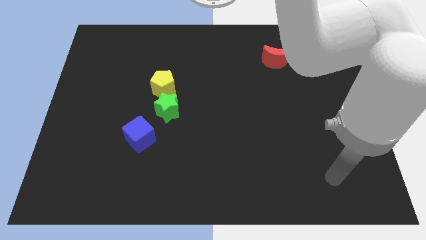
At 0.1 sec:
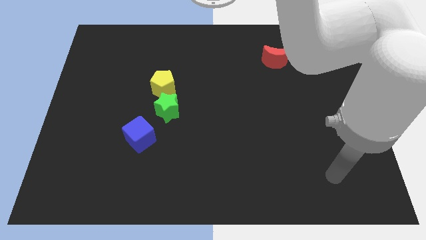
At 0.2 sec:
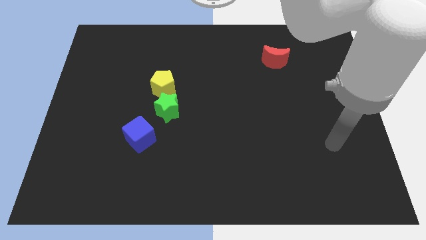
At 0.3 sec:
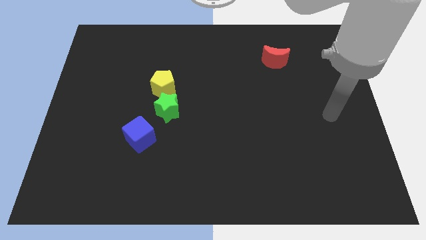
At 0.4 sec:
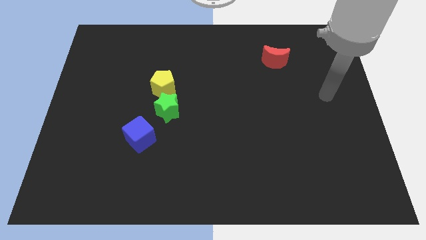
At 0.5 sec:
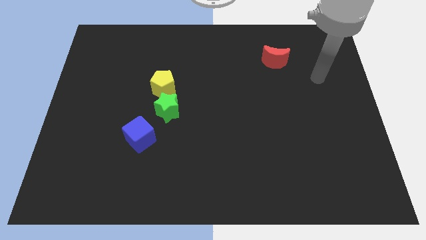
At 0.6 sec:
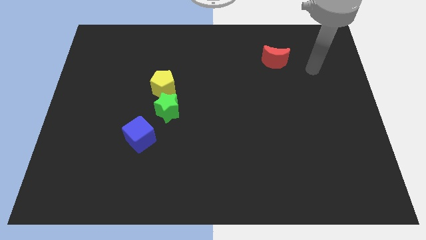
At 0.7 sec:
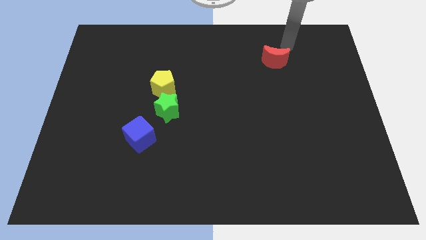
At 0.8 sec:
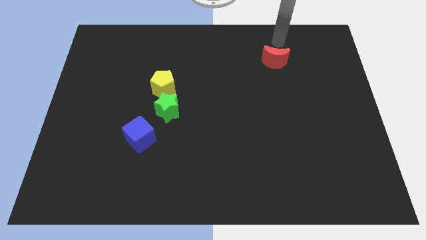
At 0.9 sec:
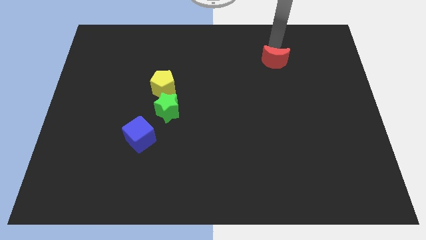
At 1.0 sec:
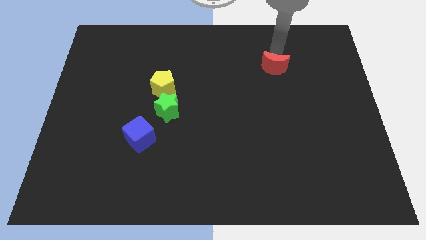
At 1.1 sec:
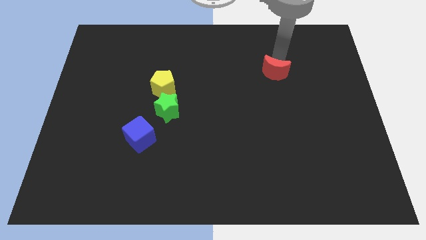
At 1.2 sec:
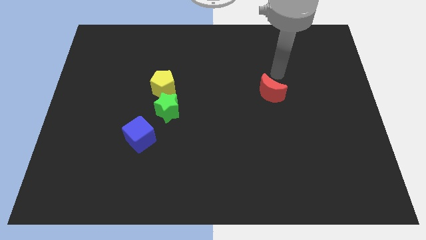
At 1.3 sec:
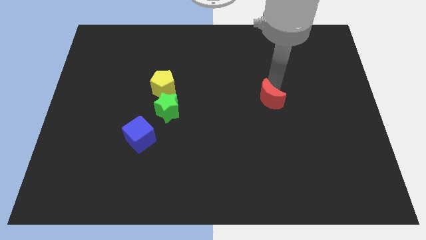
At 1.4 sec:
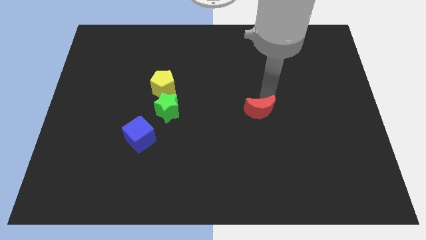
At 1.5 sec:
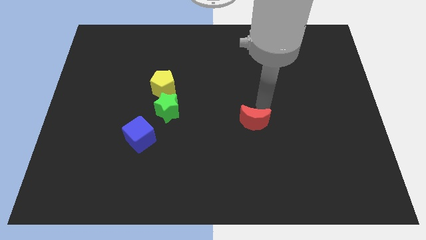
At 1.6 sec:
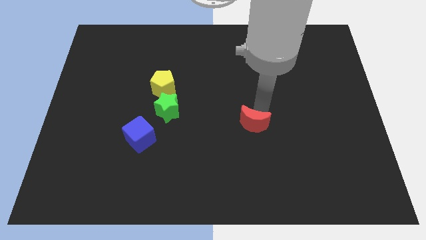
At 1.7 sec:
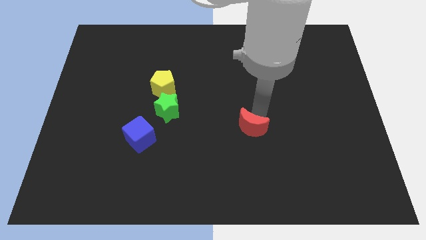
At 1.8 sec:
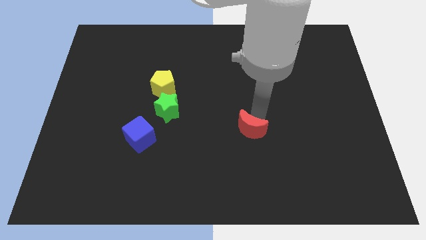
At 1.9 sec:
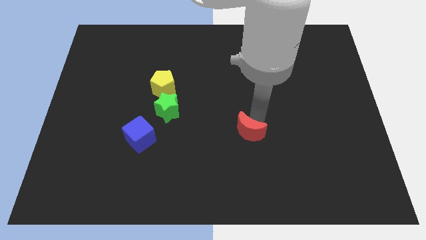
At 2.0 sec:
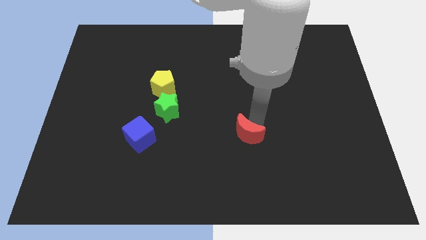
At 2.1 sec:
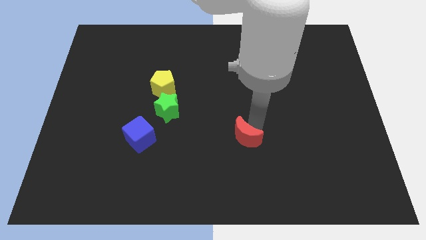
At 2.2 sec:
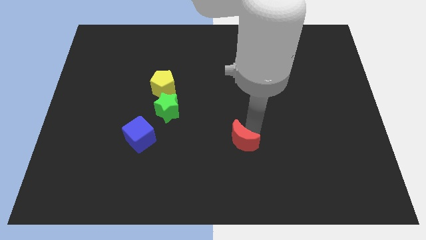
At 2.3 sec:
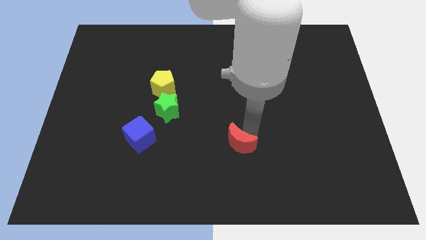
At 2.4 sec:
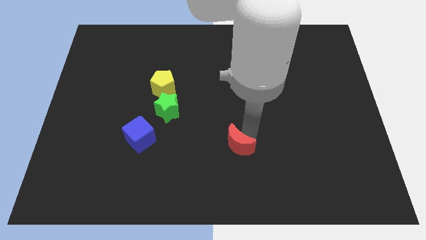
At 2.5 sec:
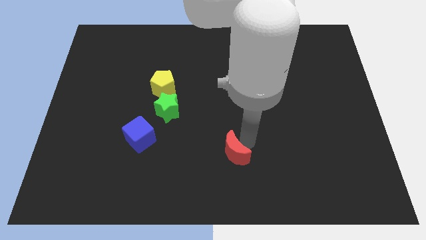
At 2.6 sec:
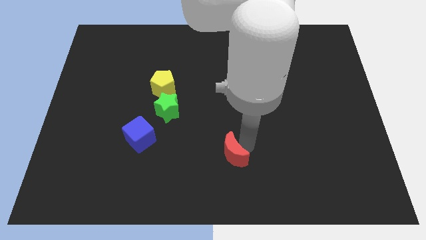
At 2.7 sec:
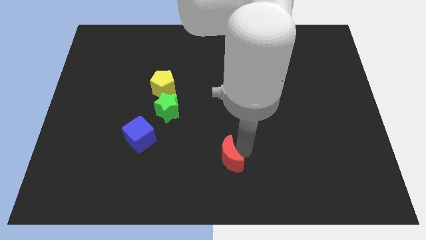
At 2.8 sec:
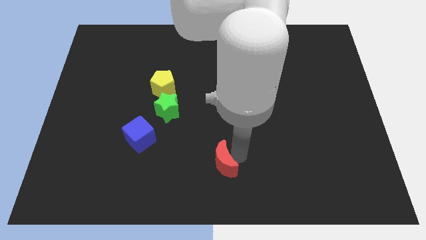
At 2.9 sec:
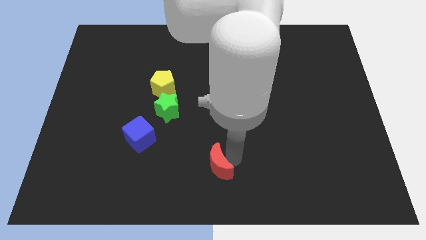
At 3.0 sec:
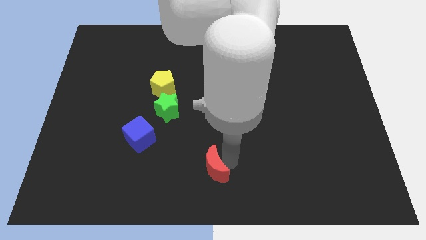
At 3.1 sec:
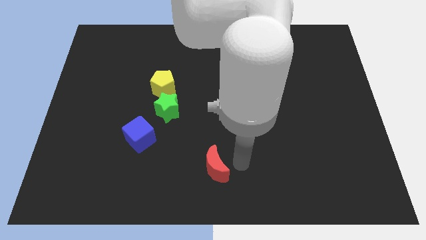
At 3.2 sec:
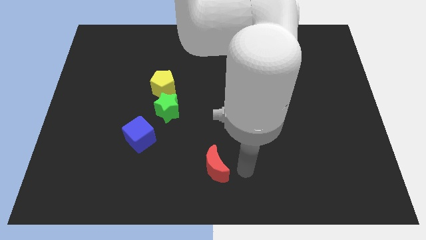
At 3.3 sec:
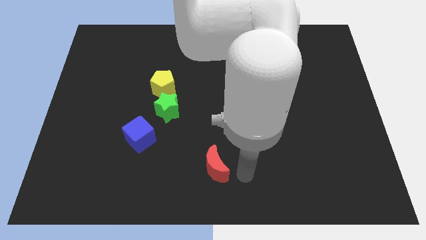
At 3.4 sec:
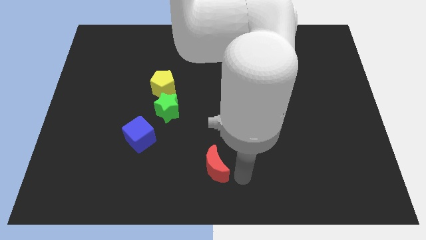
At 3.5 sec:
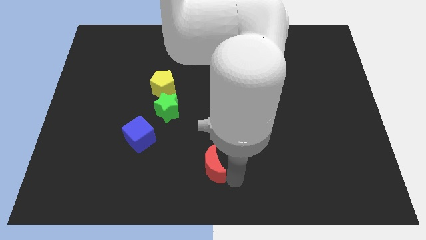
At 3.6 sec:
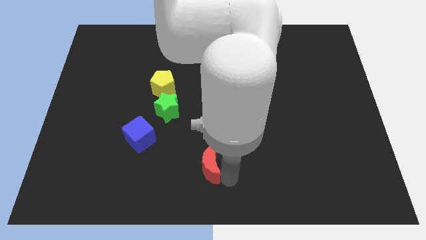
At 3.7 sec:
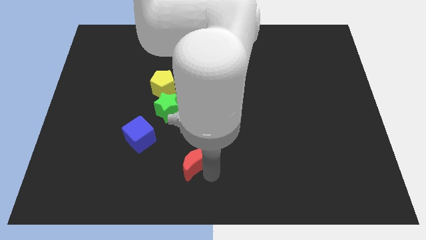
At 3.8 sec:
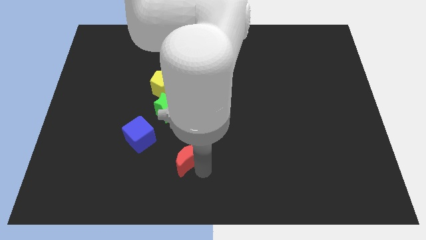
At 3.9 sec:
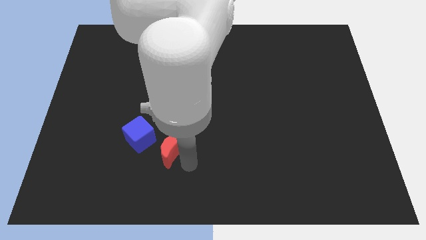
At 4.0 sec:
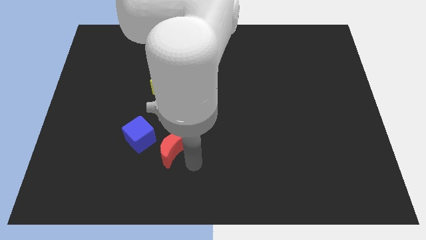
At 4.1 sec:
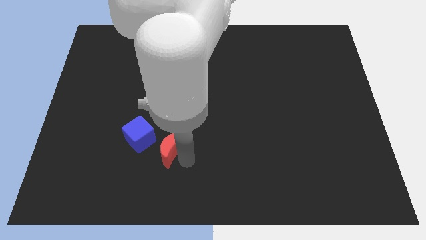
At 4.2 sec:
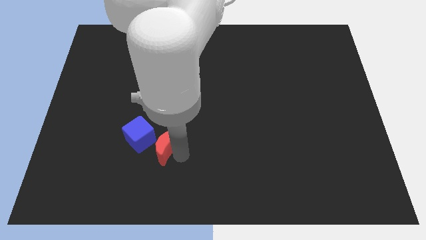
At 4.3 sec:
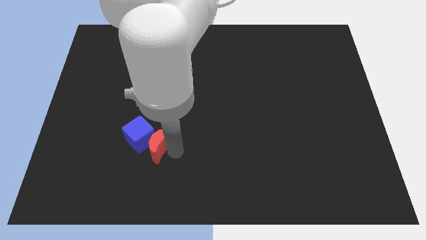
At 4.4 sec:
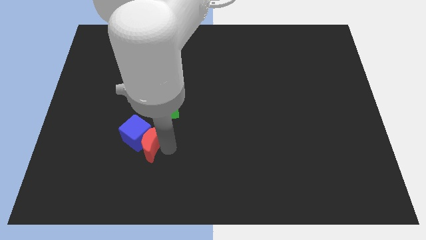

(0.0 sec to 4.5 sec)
put the red moon next to the blue block

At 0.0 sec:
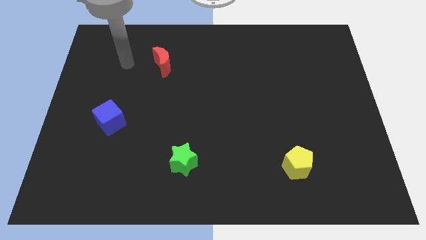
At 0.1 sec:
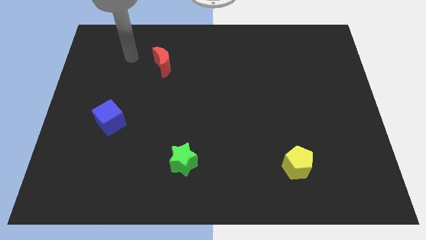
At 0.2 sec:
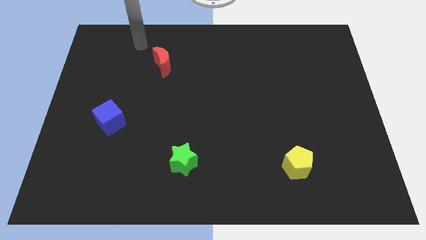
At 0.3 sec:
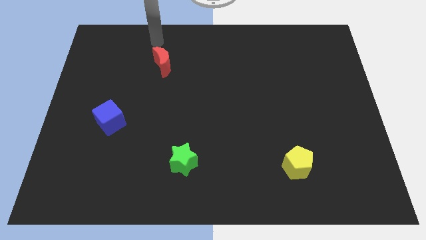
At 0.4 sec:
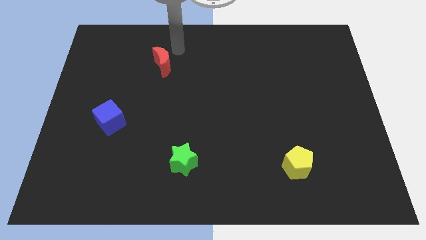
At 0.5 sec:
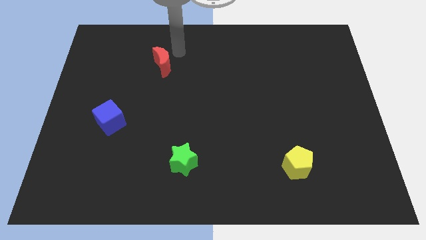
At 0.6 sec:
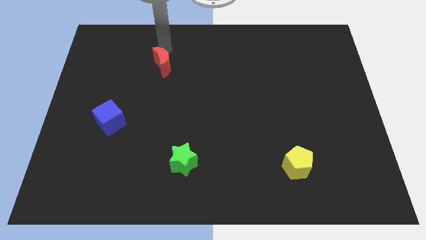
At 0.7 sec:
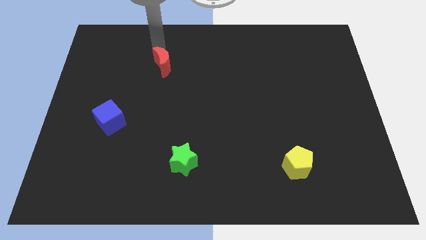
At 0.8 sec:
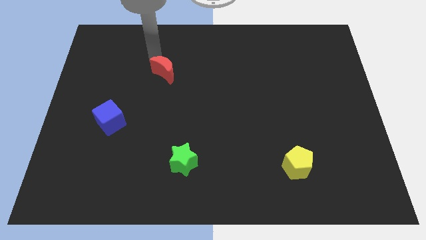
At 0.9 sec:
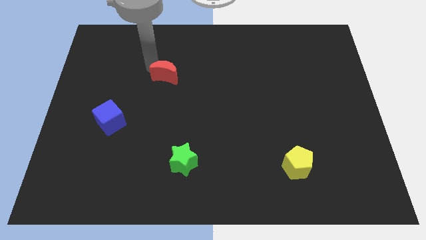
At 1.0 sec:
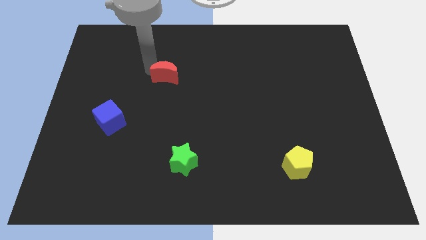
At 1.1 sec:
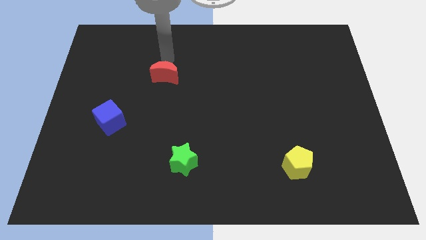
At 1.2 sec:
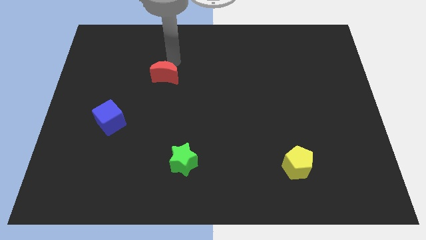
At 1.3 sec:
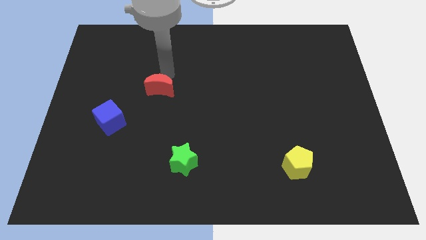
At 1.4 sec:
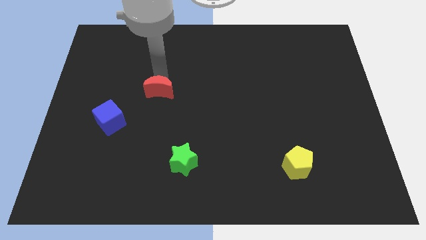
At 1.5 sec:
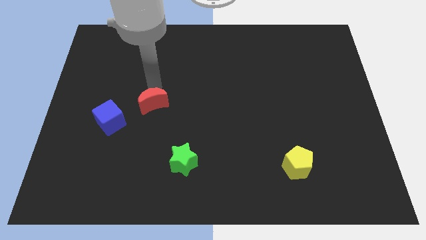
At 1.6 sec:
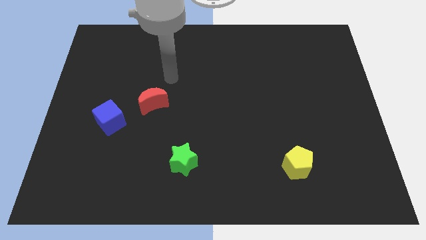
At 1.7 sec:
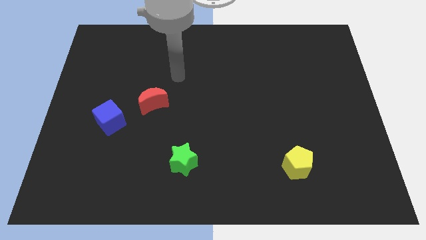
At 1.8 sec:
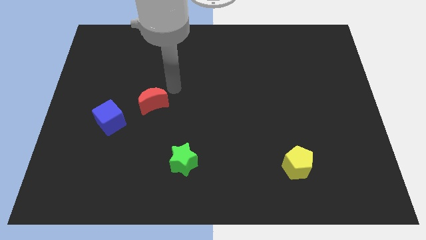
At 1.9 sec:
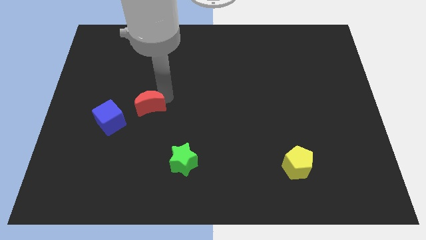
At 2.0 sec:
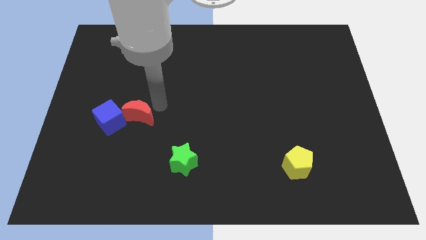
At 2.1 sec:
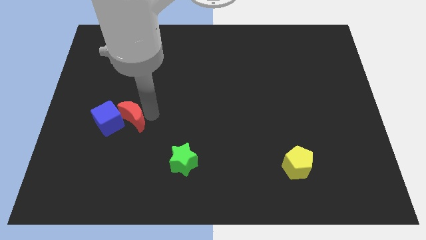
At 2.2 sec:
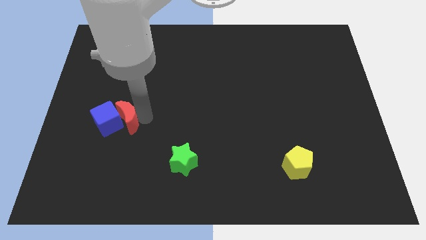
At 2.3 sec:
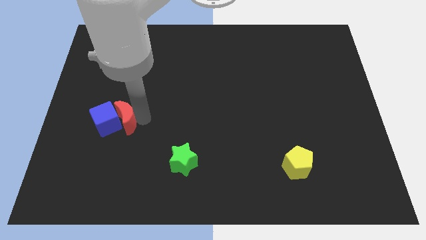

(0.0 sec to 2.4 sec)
push the red block close to the blue cube

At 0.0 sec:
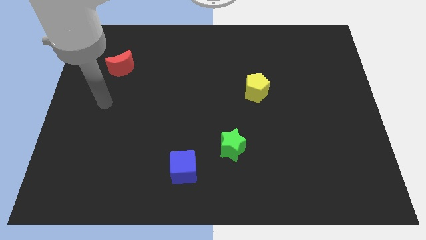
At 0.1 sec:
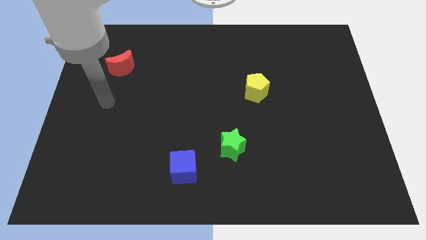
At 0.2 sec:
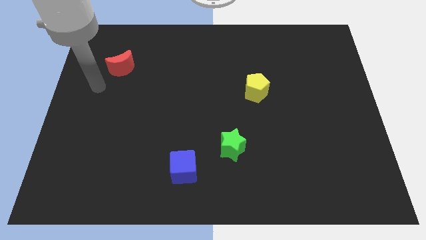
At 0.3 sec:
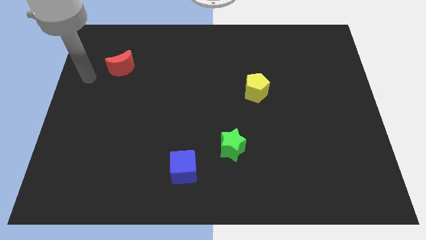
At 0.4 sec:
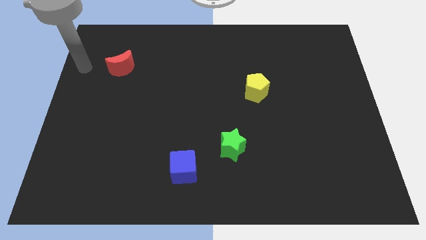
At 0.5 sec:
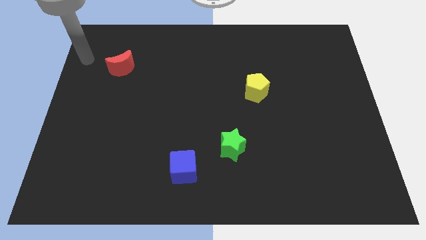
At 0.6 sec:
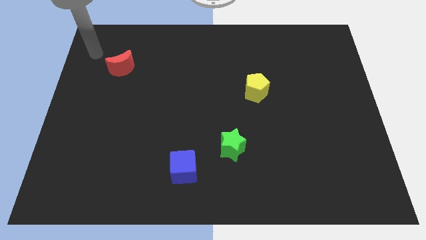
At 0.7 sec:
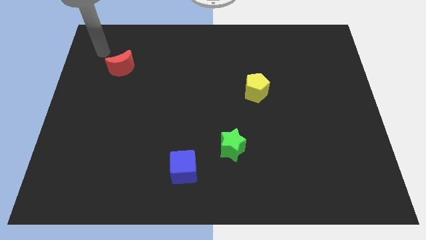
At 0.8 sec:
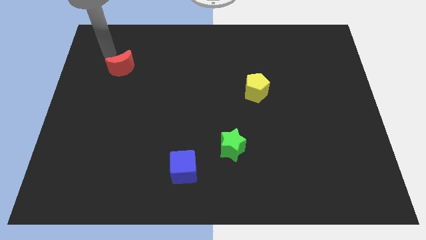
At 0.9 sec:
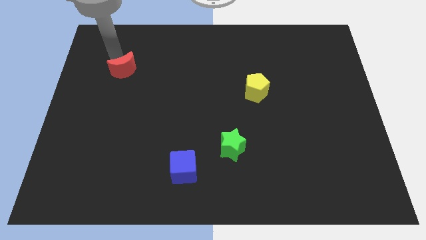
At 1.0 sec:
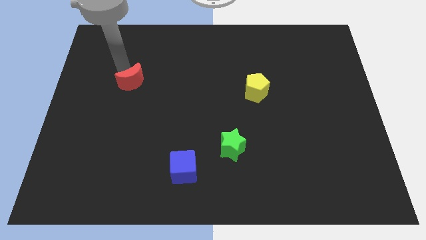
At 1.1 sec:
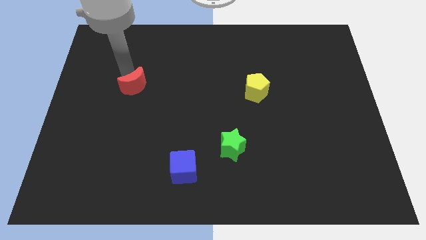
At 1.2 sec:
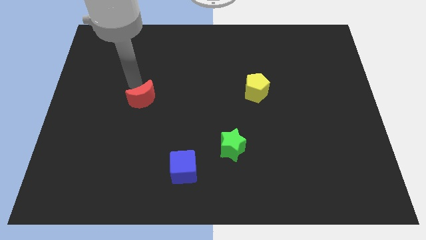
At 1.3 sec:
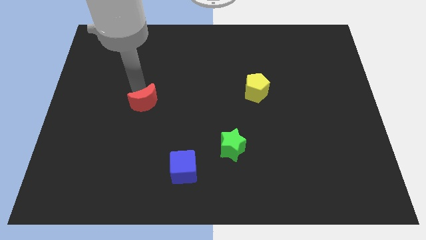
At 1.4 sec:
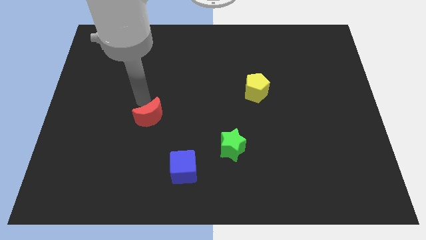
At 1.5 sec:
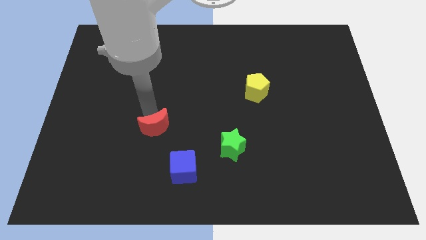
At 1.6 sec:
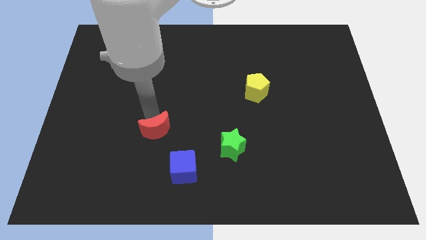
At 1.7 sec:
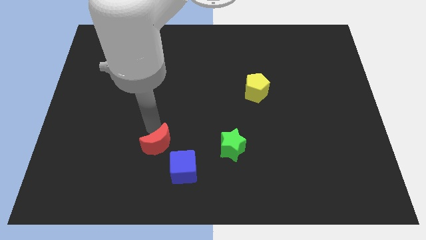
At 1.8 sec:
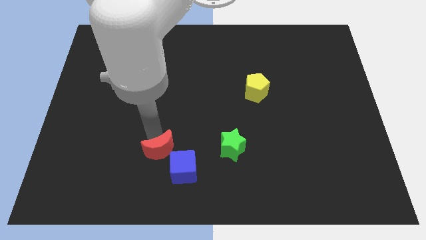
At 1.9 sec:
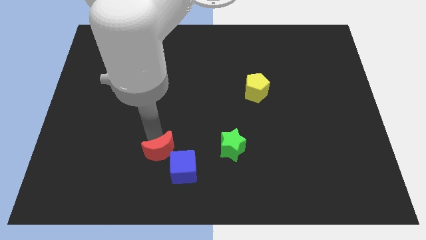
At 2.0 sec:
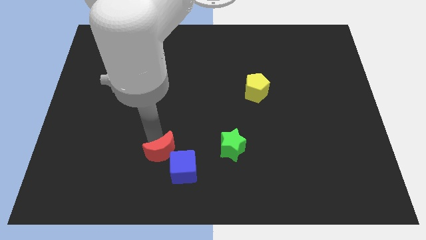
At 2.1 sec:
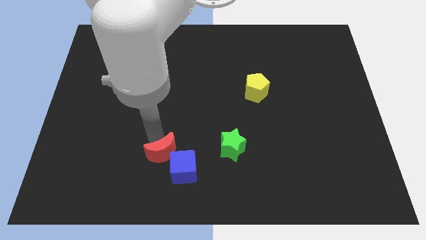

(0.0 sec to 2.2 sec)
move the red moon close to the cube
